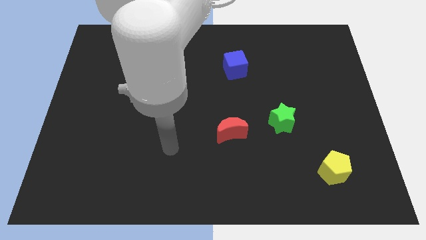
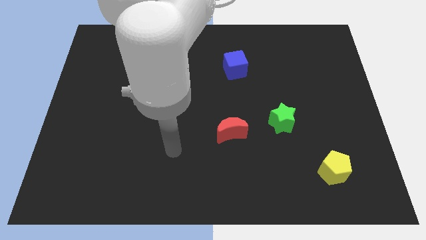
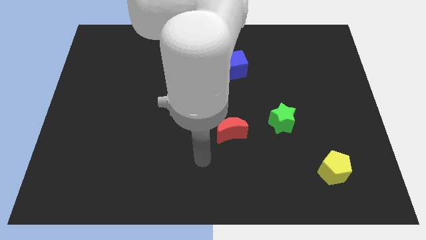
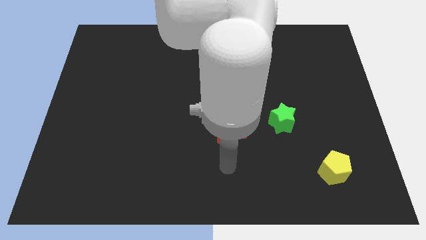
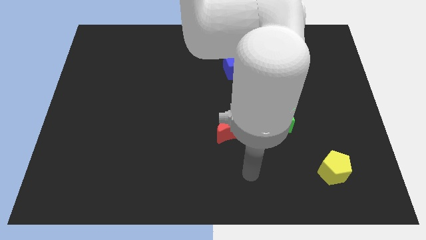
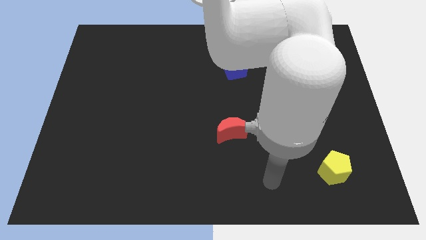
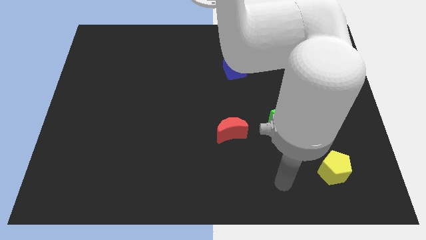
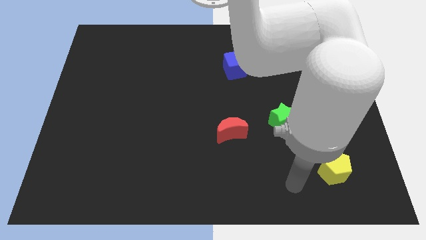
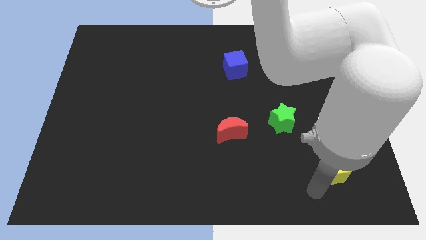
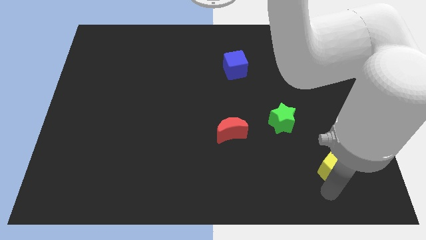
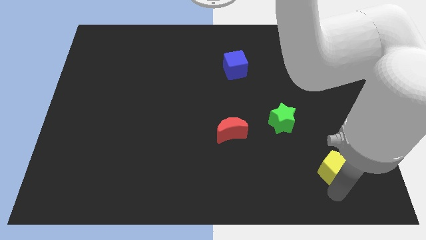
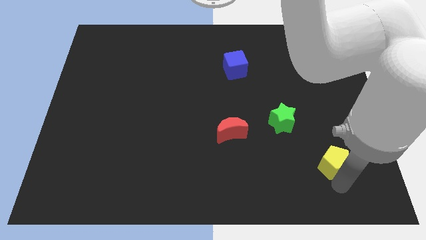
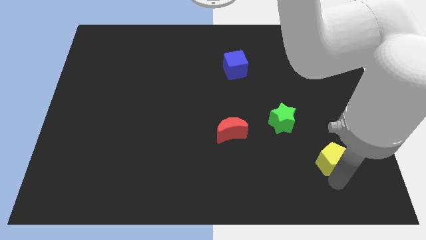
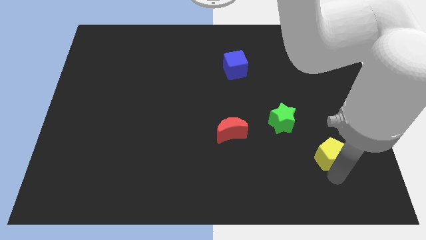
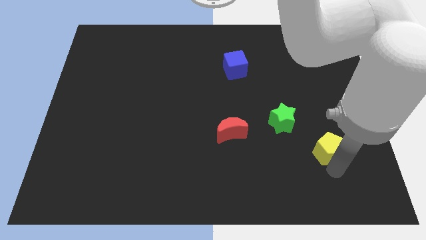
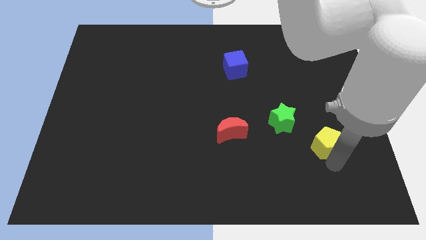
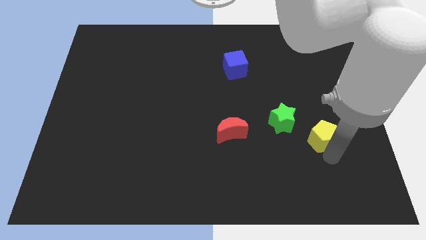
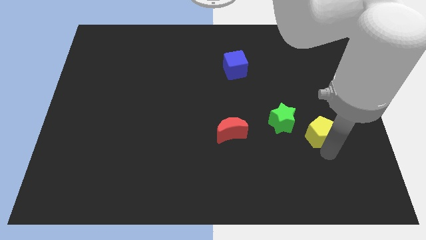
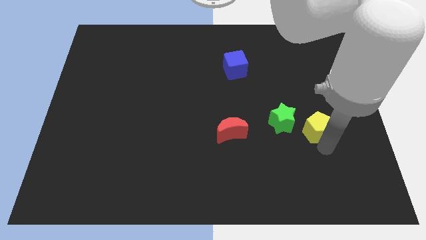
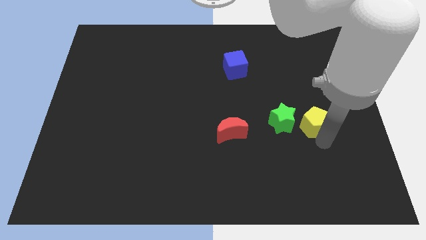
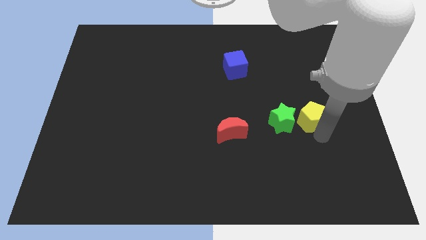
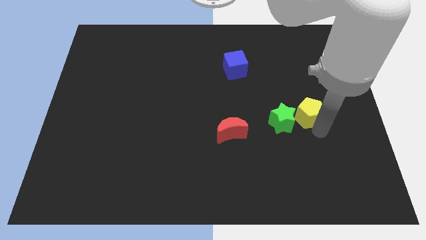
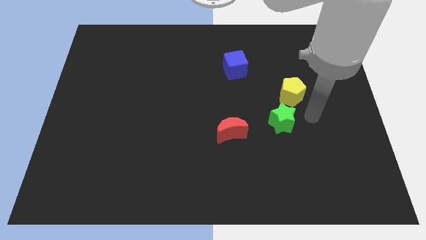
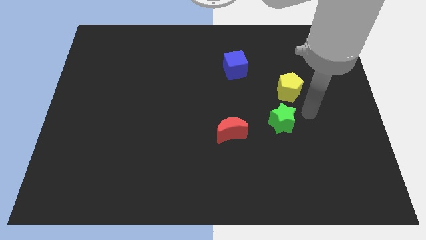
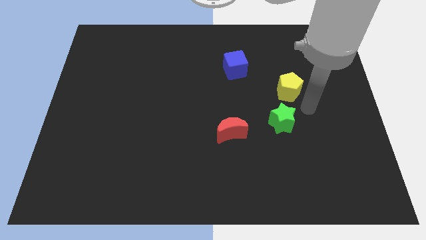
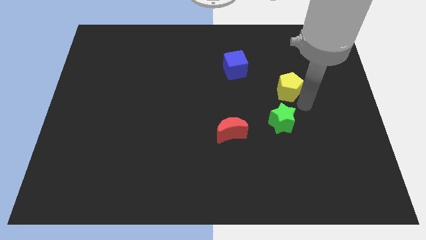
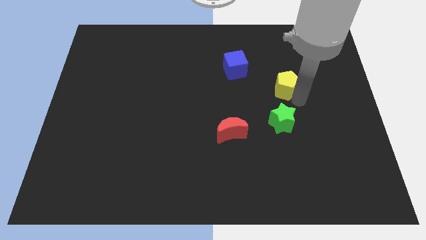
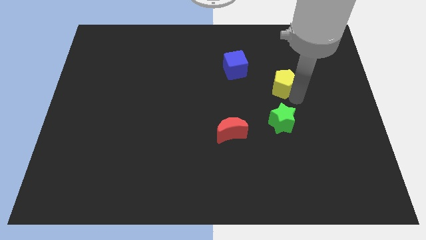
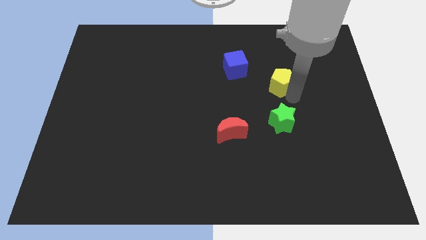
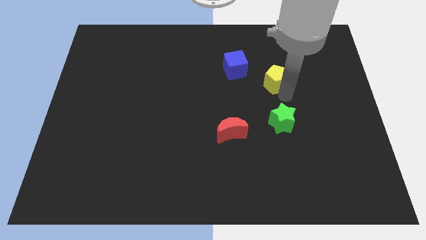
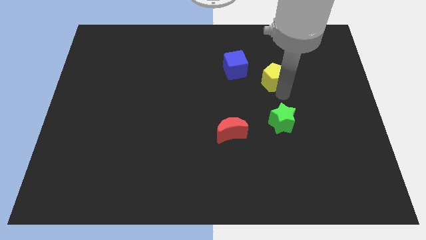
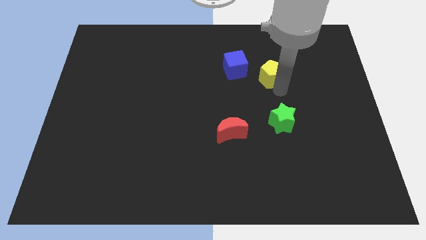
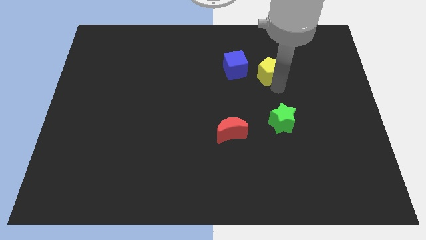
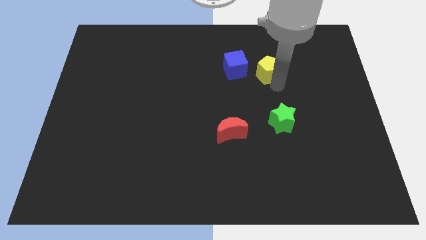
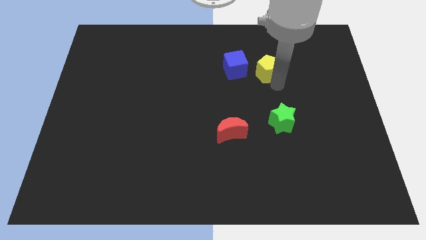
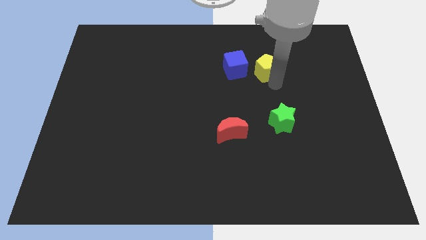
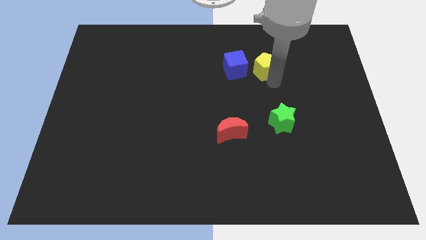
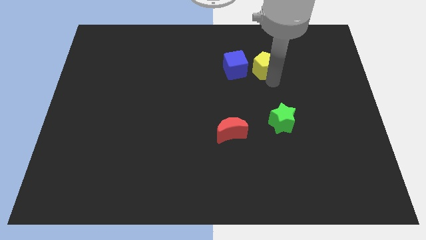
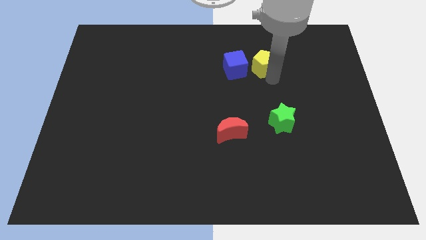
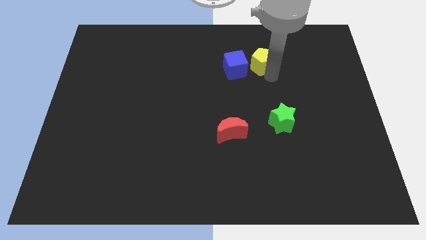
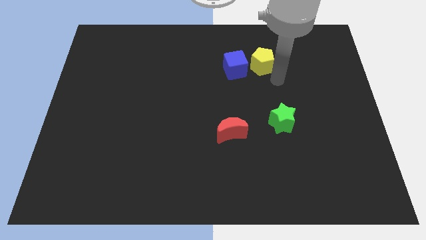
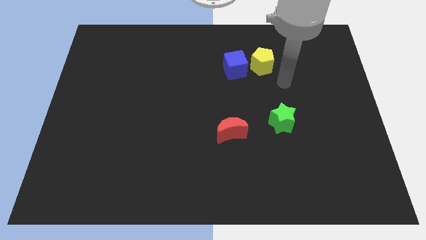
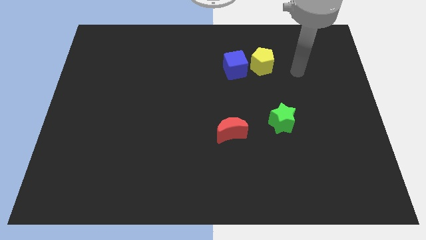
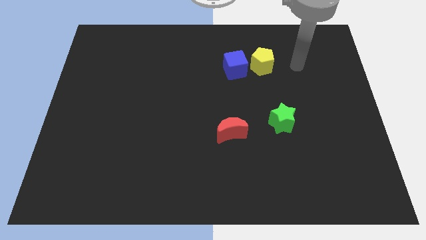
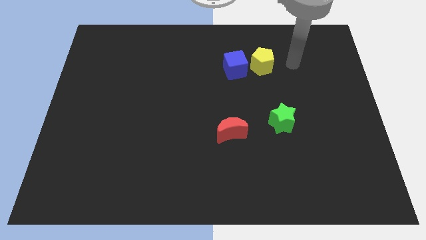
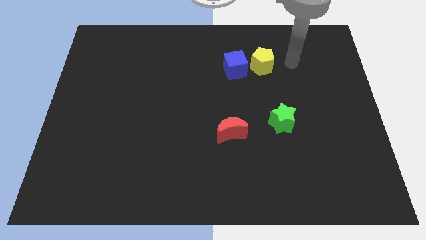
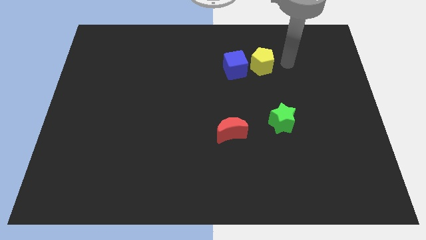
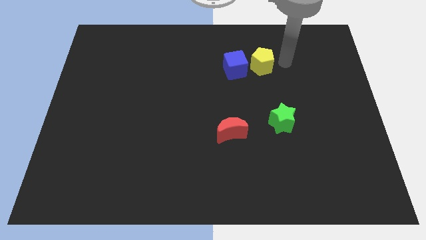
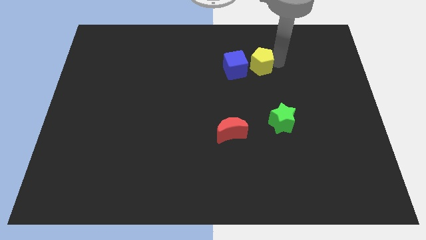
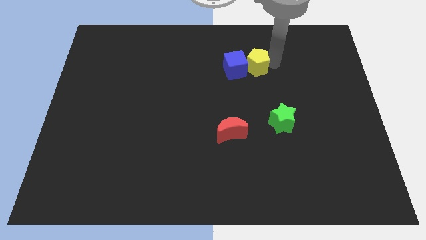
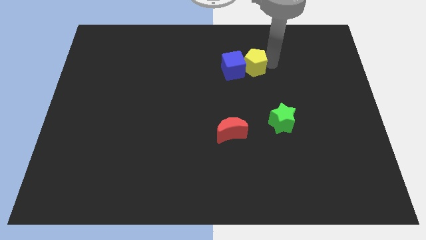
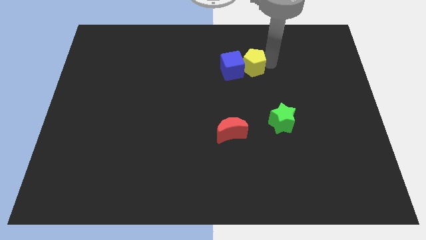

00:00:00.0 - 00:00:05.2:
slide the pentagon close to the cube

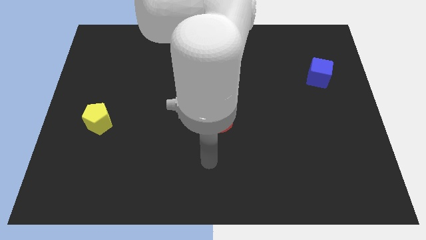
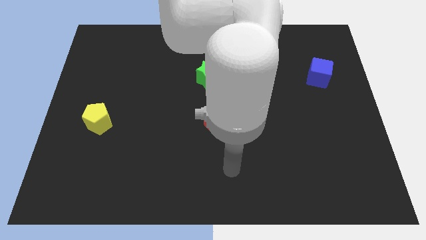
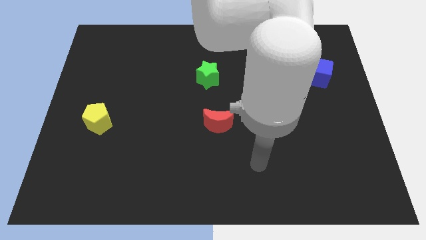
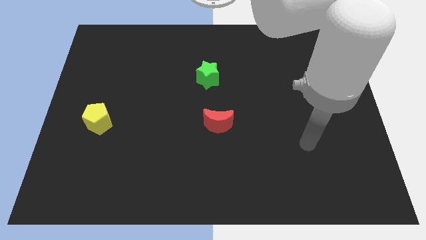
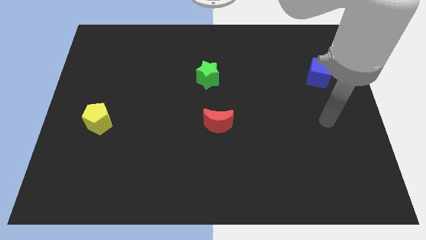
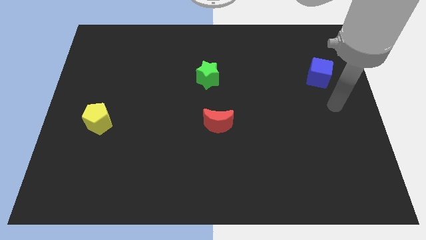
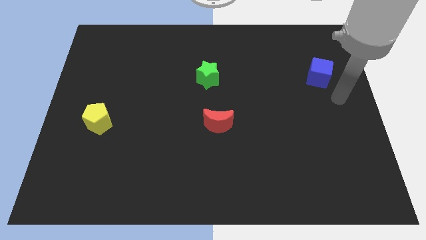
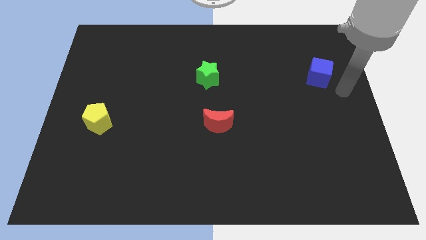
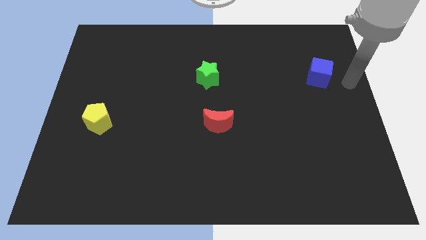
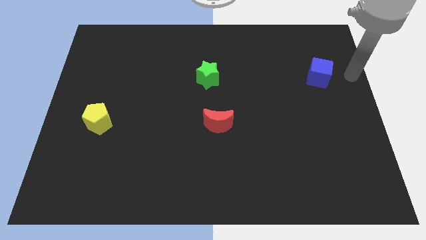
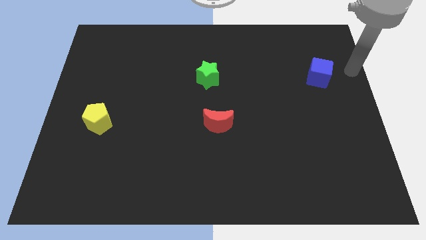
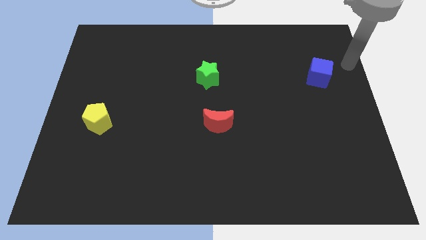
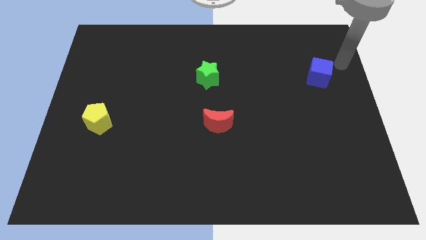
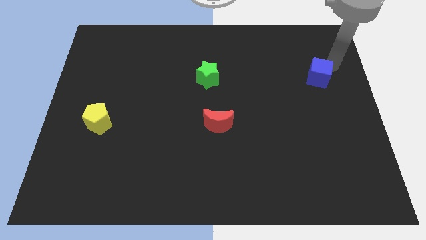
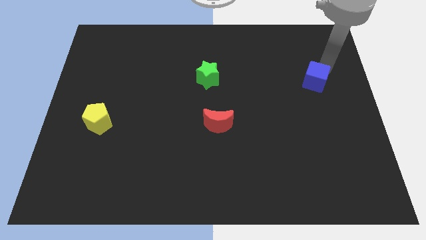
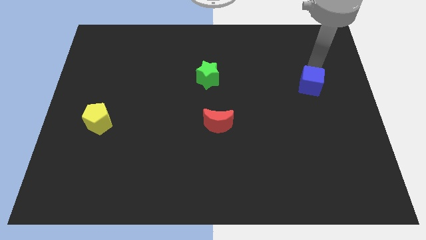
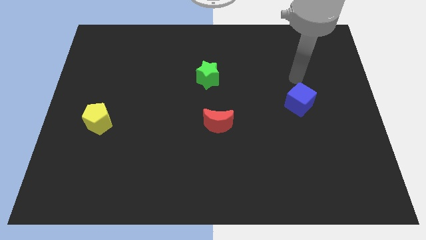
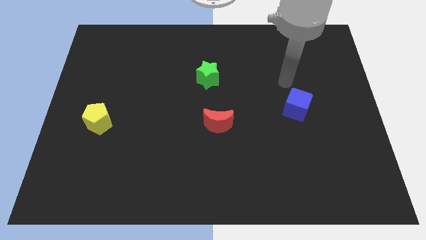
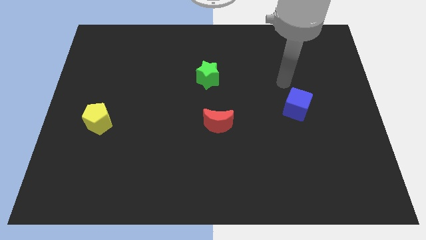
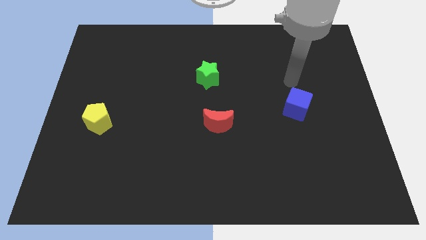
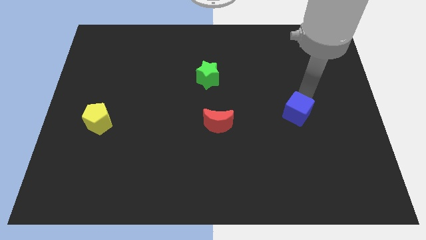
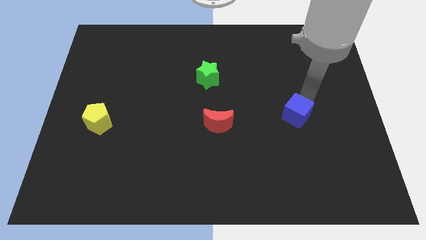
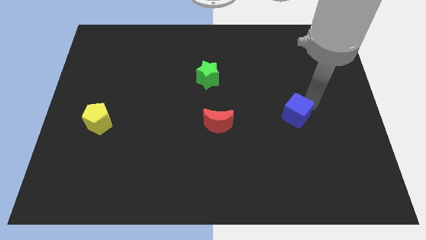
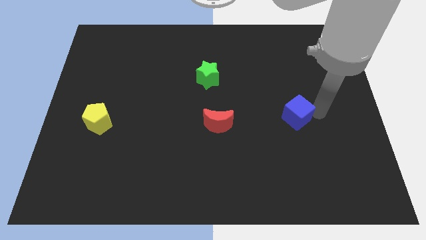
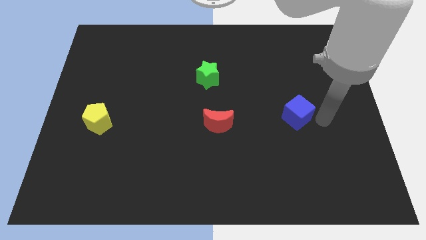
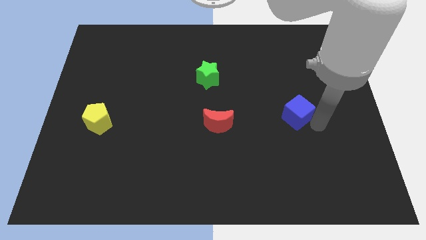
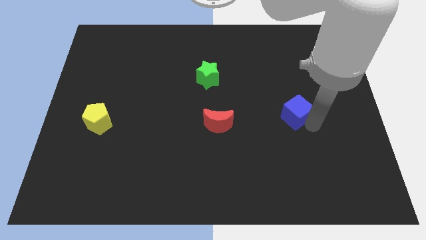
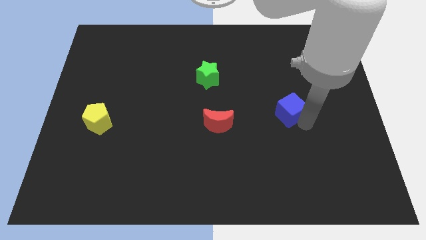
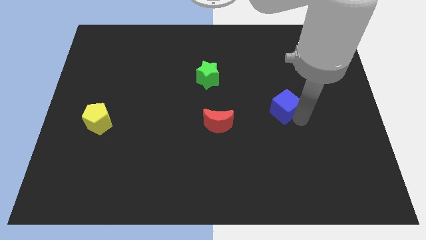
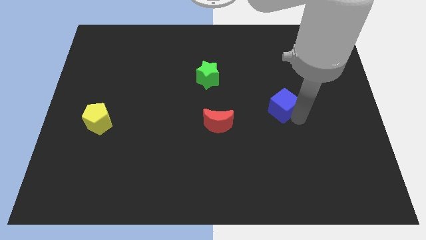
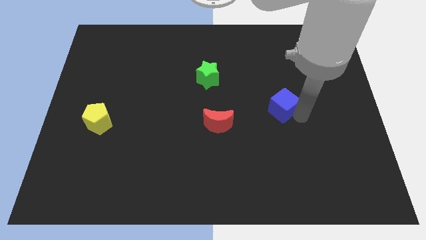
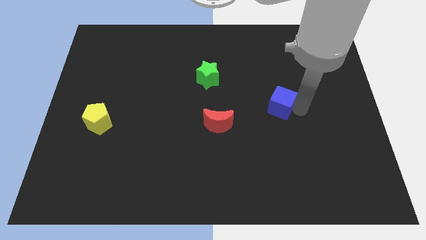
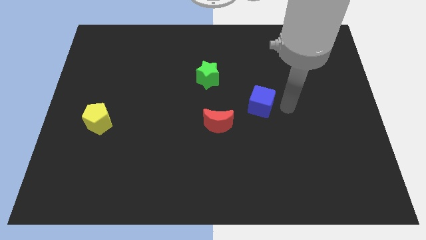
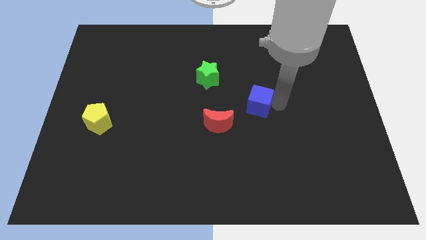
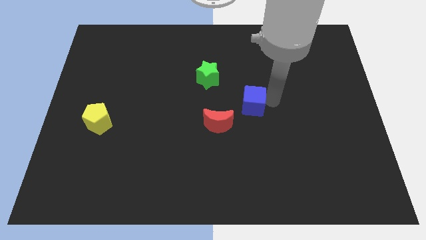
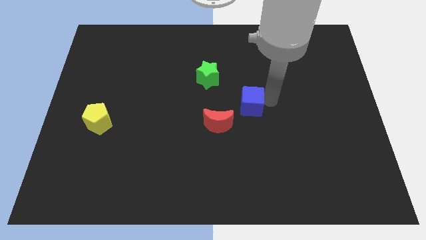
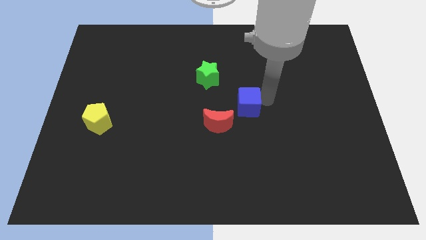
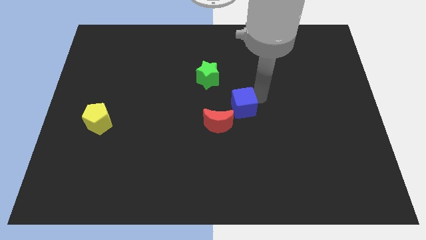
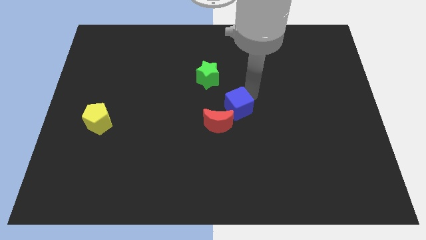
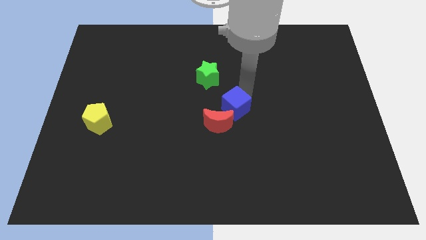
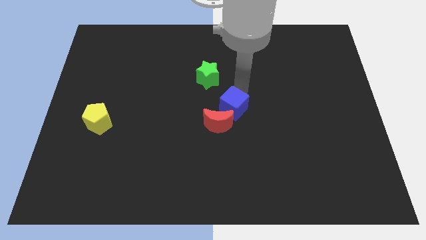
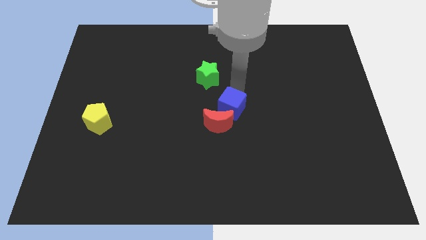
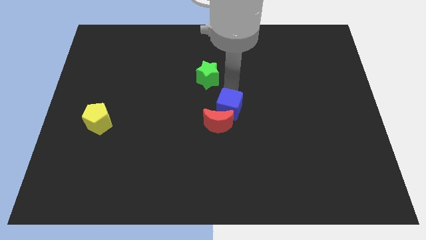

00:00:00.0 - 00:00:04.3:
move the blue cube towards the red moon
